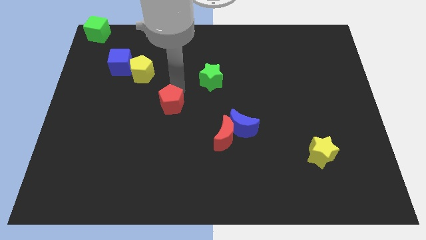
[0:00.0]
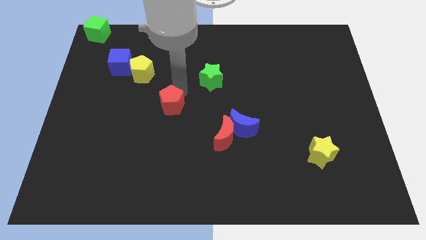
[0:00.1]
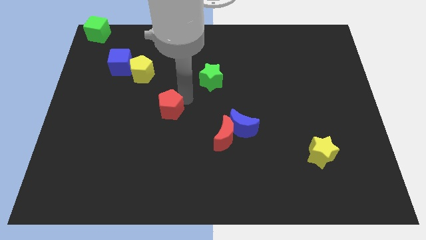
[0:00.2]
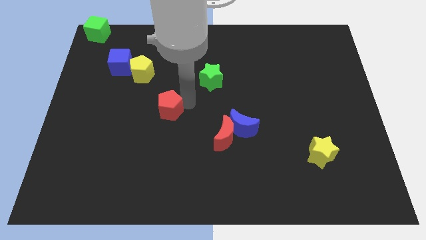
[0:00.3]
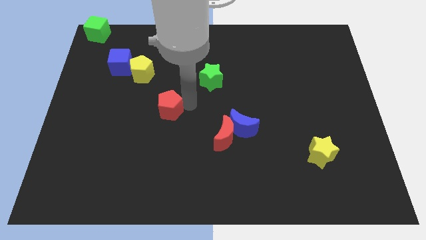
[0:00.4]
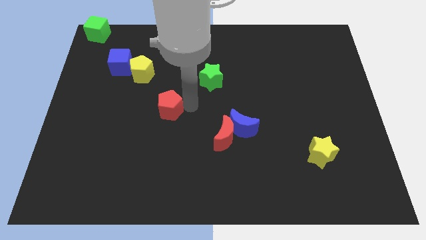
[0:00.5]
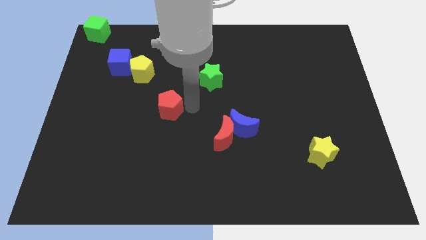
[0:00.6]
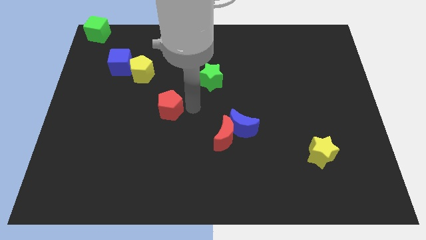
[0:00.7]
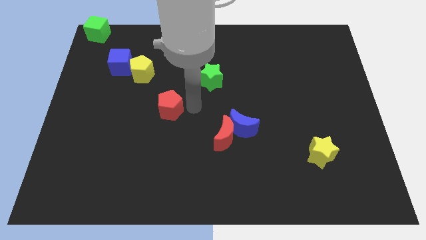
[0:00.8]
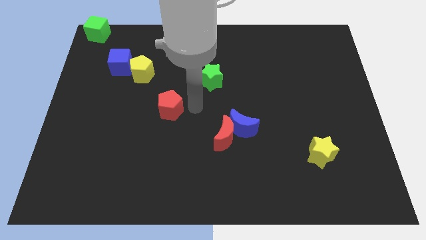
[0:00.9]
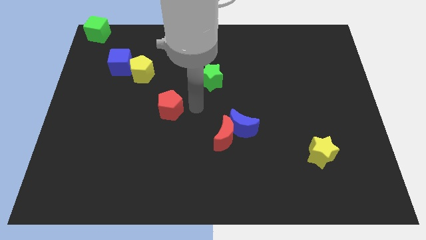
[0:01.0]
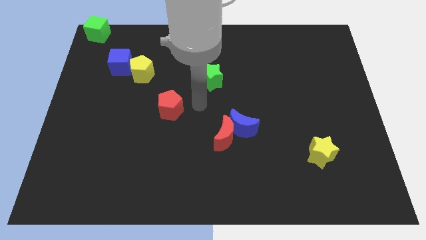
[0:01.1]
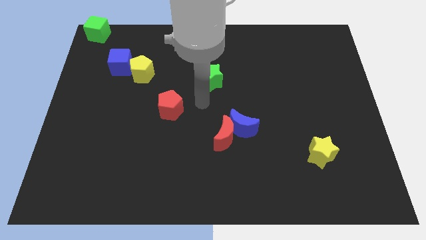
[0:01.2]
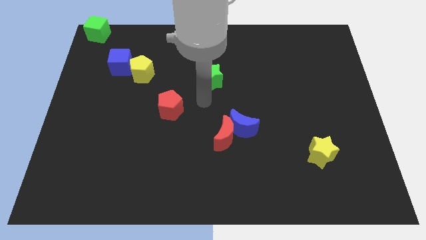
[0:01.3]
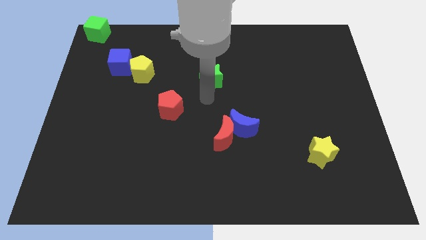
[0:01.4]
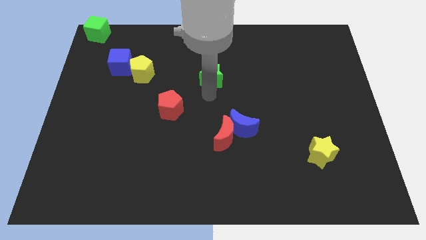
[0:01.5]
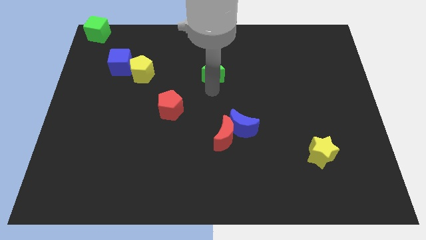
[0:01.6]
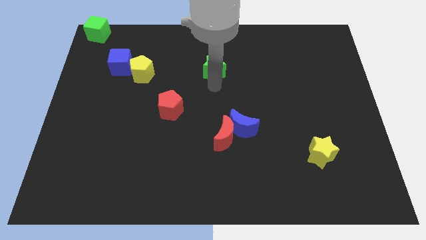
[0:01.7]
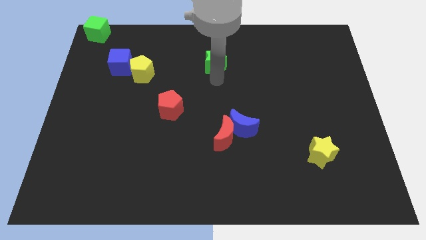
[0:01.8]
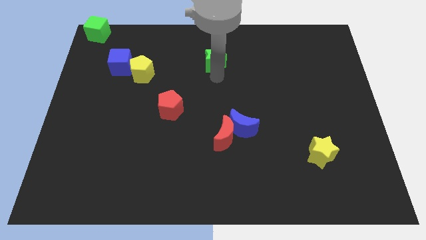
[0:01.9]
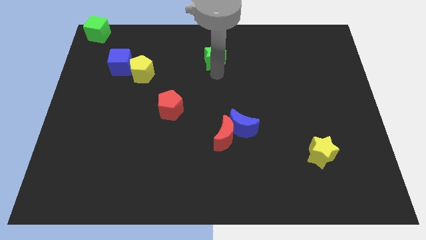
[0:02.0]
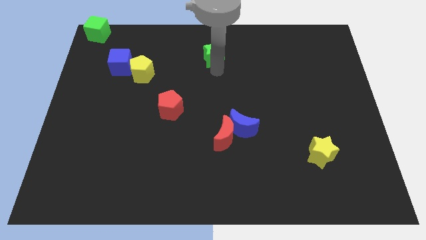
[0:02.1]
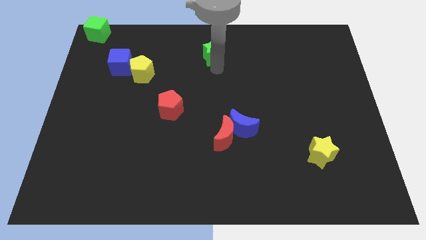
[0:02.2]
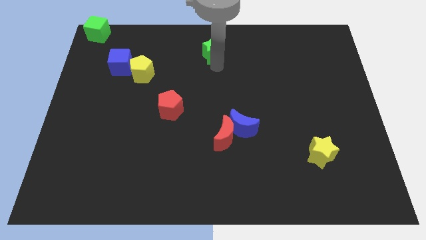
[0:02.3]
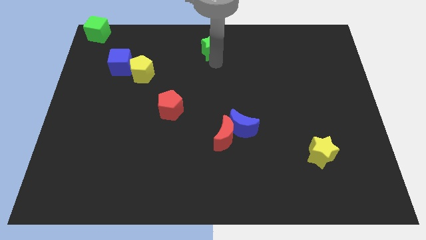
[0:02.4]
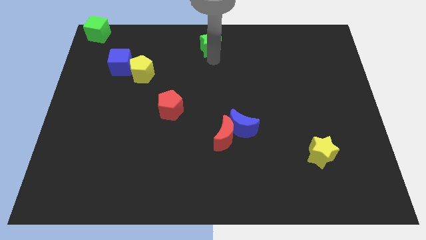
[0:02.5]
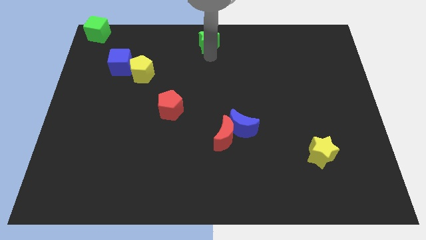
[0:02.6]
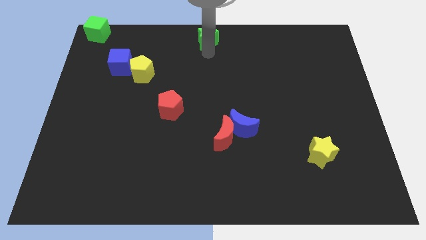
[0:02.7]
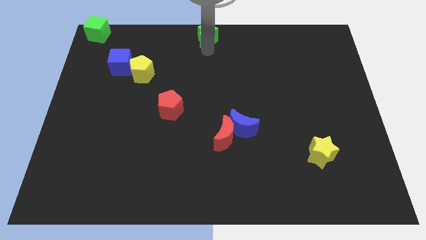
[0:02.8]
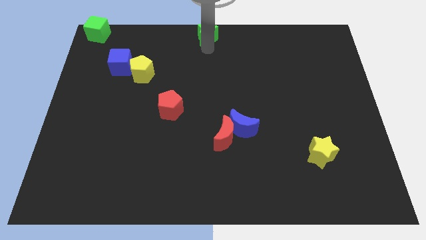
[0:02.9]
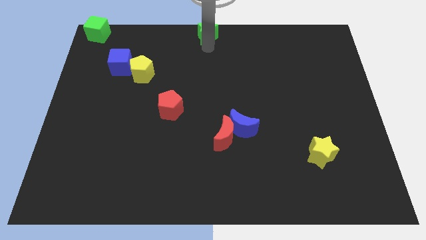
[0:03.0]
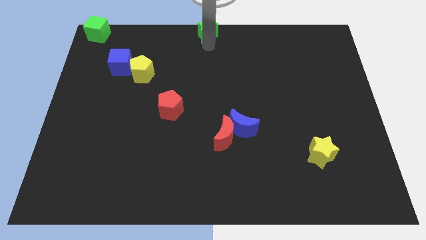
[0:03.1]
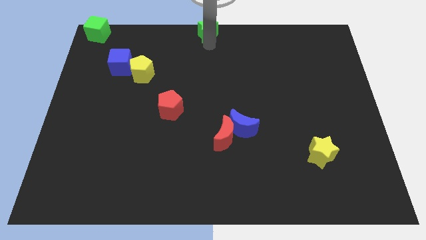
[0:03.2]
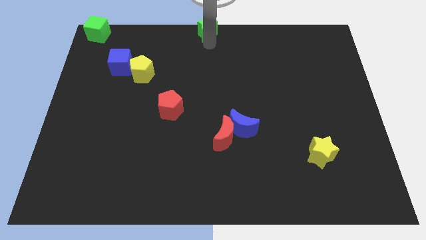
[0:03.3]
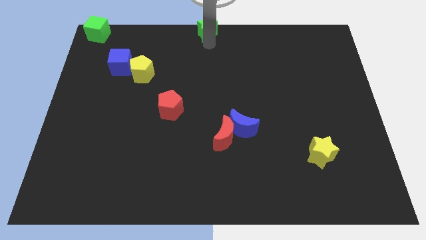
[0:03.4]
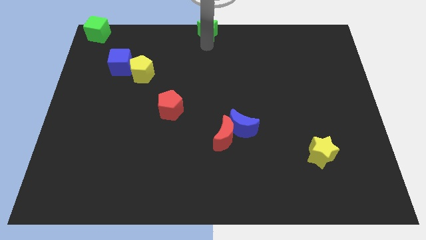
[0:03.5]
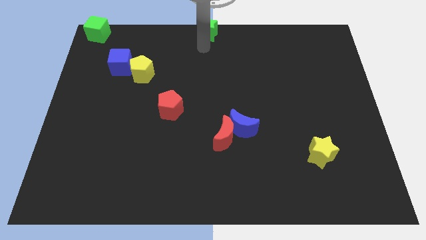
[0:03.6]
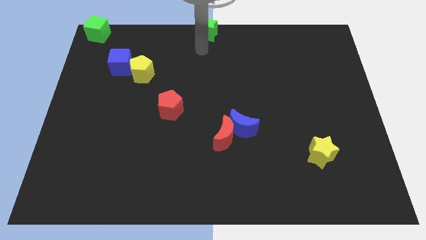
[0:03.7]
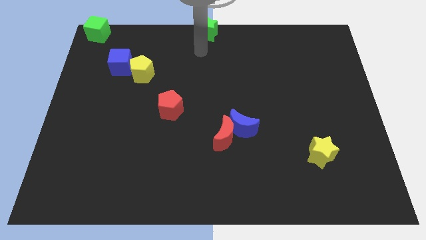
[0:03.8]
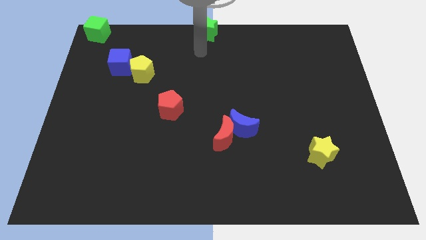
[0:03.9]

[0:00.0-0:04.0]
push green star towards up

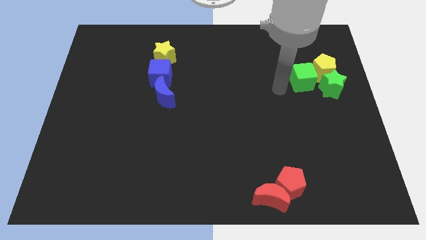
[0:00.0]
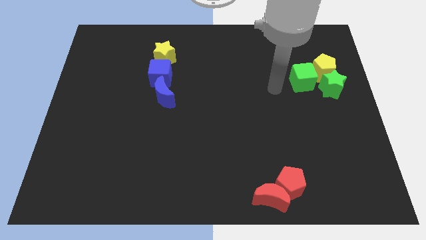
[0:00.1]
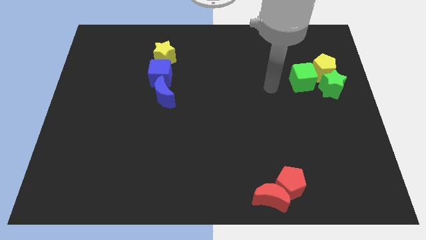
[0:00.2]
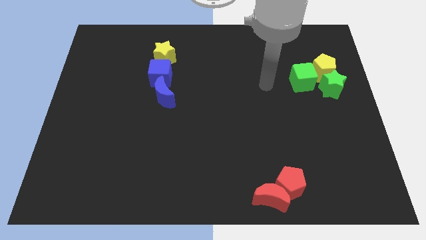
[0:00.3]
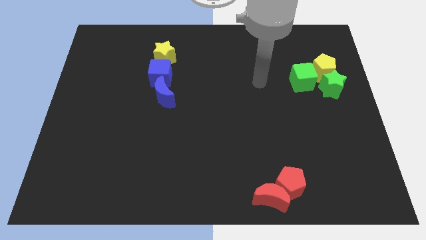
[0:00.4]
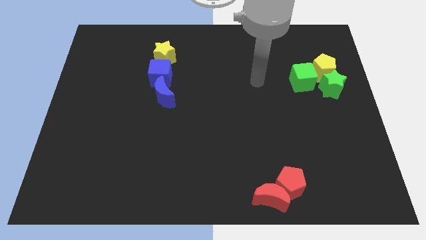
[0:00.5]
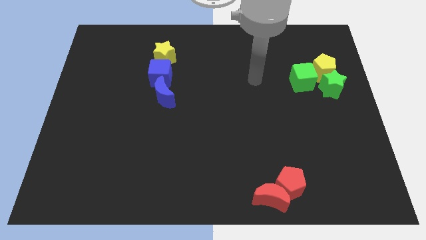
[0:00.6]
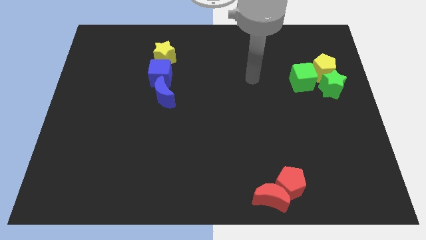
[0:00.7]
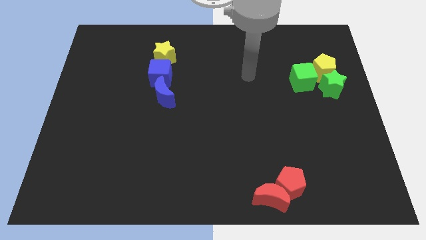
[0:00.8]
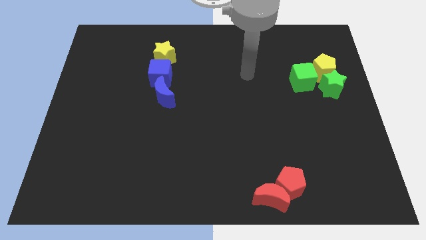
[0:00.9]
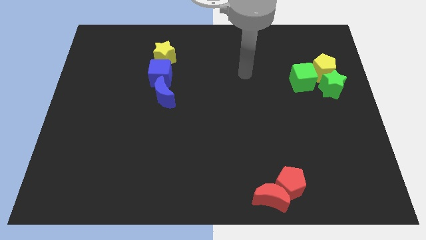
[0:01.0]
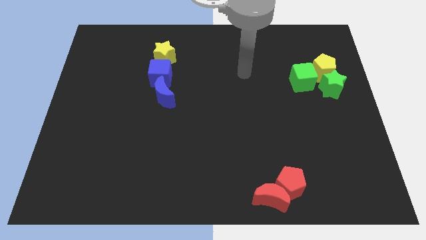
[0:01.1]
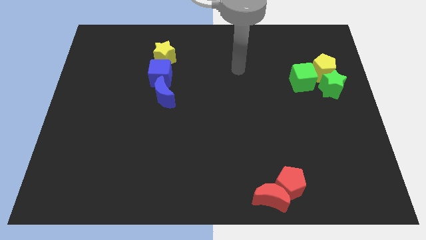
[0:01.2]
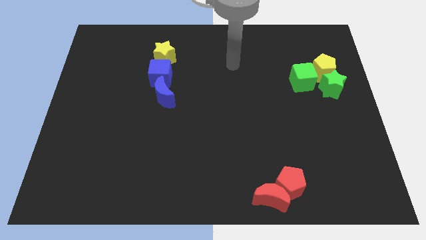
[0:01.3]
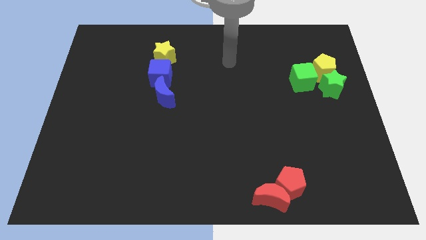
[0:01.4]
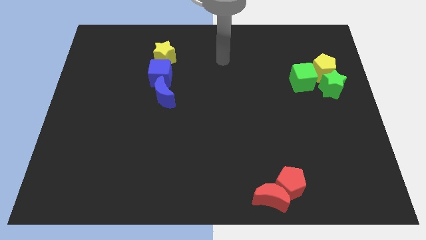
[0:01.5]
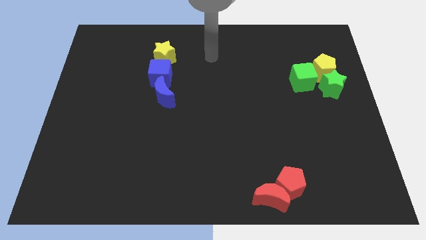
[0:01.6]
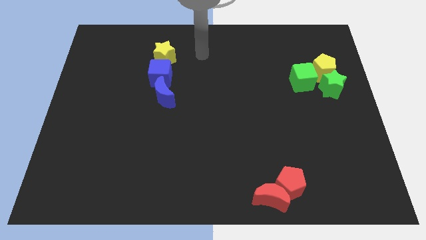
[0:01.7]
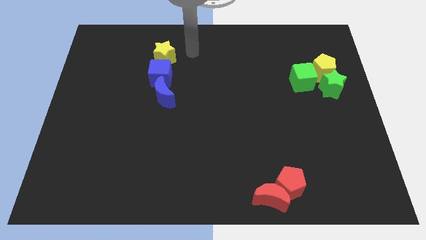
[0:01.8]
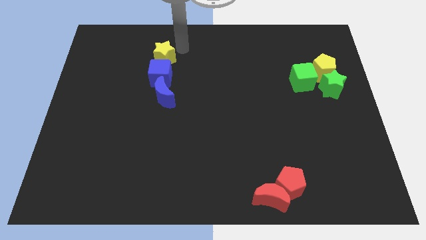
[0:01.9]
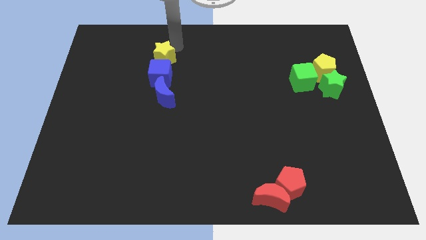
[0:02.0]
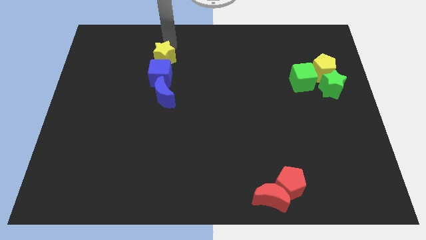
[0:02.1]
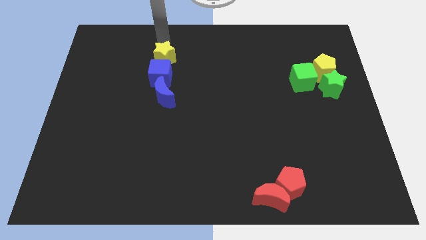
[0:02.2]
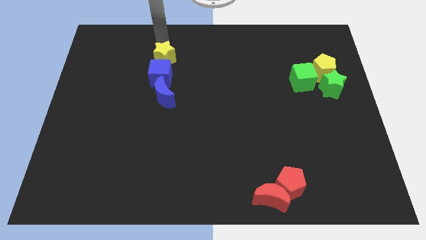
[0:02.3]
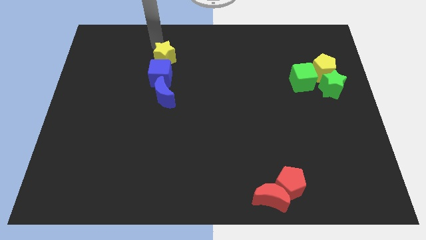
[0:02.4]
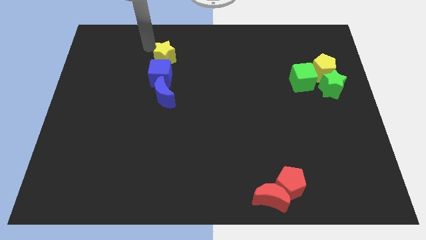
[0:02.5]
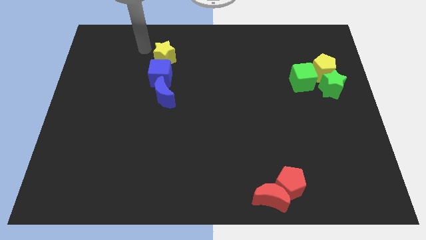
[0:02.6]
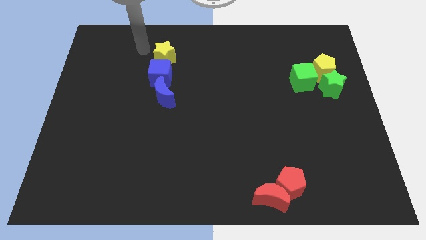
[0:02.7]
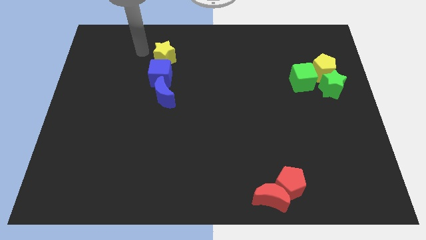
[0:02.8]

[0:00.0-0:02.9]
move your arm to the left of yellow star

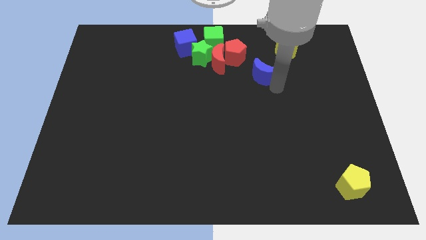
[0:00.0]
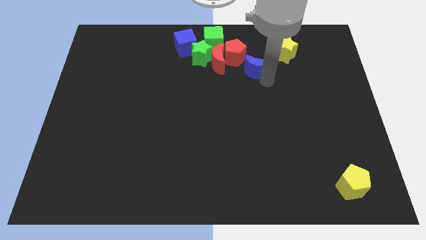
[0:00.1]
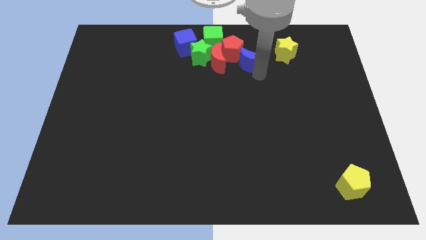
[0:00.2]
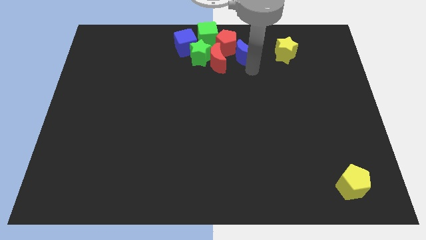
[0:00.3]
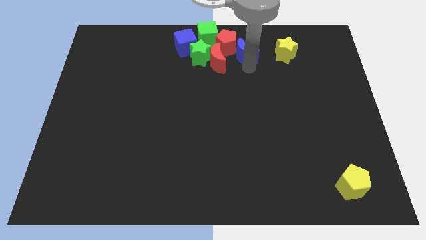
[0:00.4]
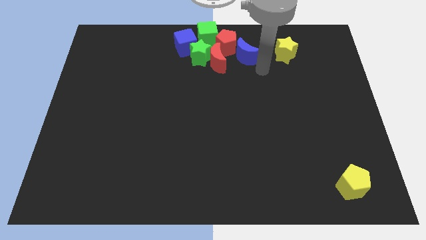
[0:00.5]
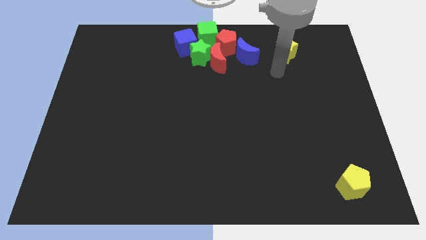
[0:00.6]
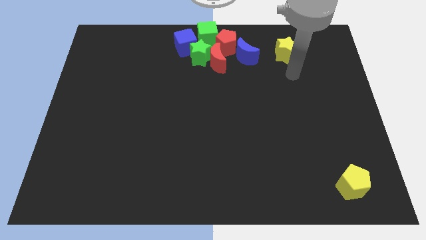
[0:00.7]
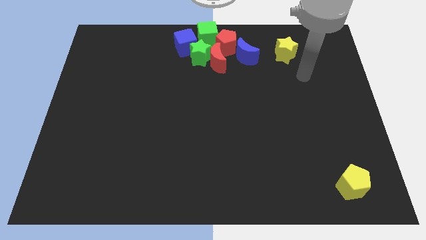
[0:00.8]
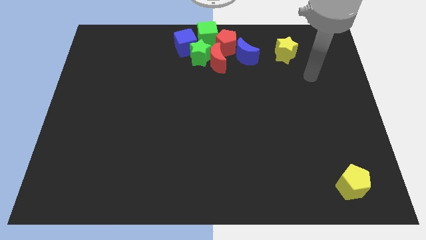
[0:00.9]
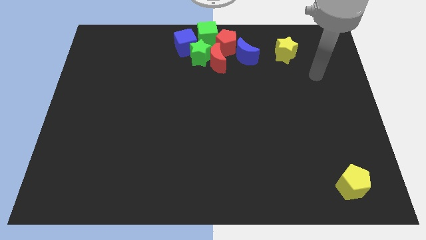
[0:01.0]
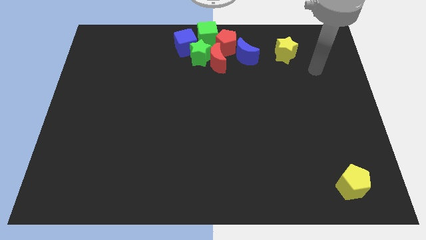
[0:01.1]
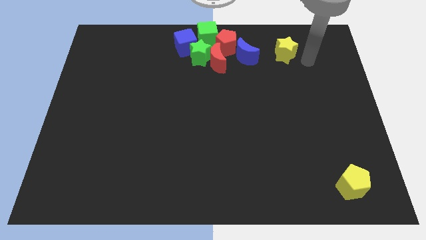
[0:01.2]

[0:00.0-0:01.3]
push the blue crescent parallel to the right of red crescent

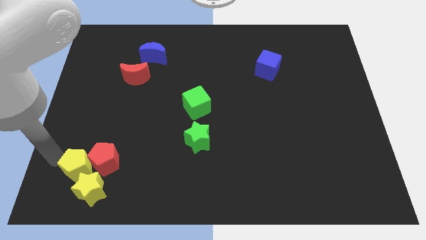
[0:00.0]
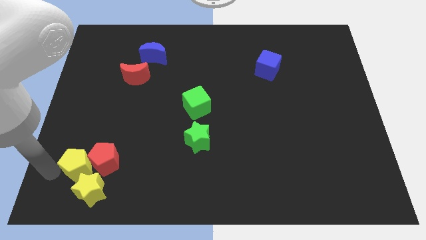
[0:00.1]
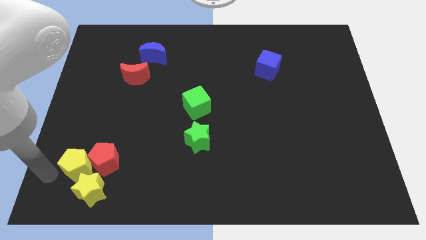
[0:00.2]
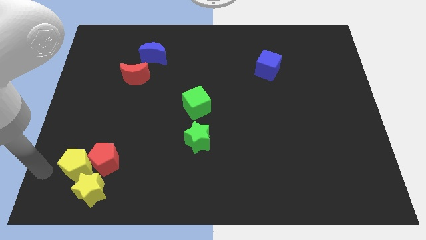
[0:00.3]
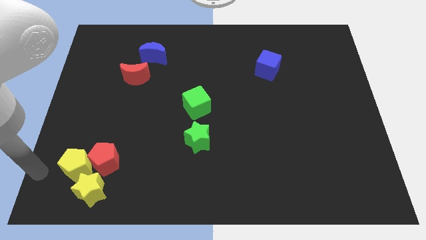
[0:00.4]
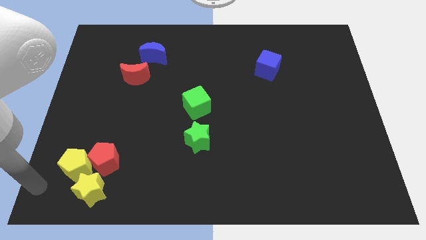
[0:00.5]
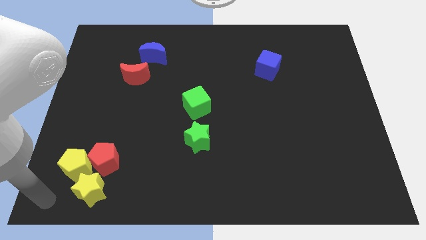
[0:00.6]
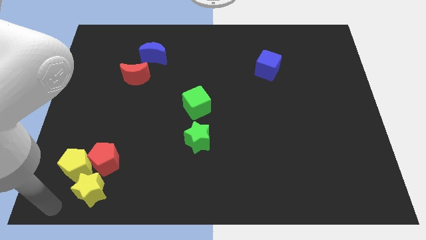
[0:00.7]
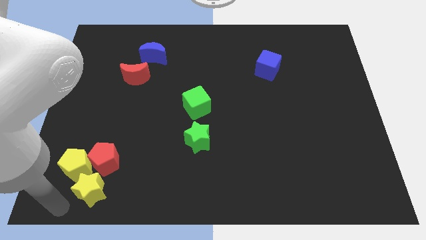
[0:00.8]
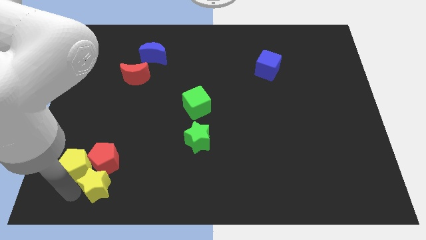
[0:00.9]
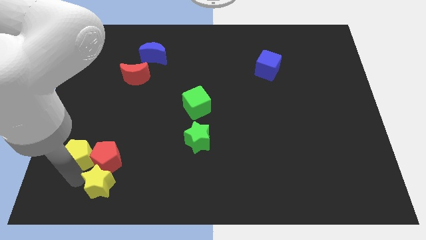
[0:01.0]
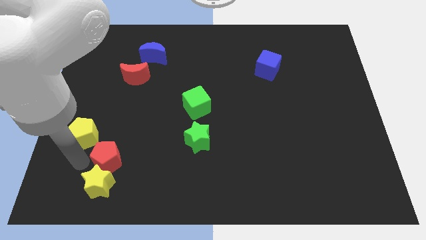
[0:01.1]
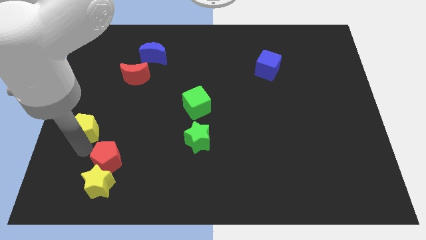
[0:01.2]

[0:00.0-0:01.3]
move the yellow pentagon towards the top of the board
